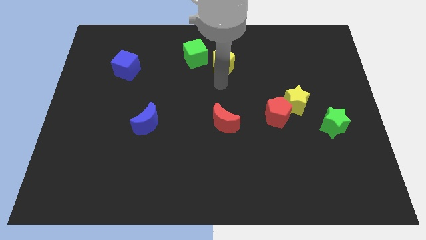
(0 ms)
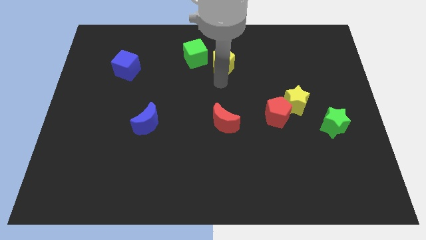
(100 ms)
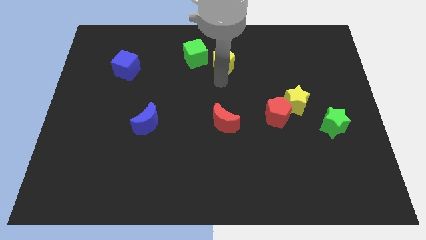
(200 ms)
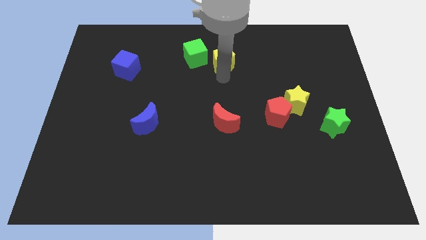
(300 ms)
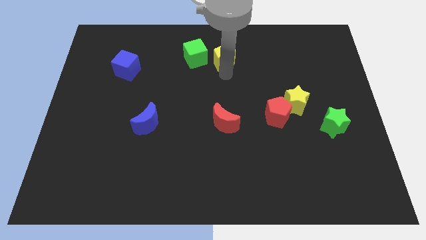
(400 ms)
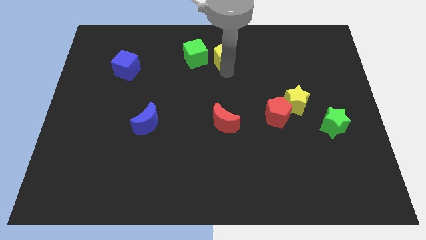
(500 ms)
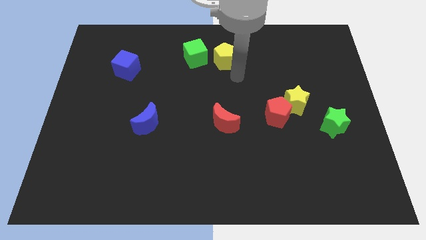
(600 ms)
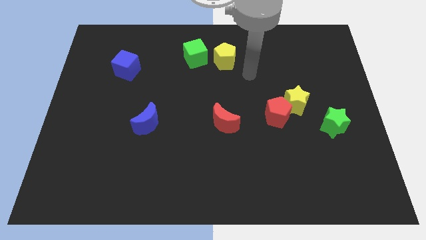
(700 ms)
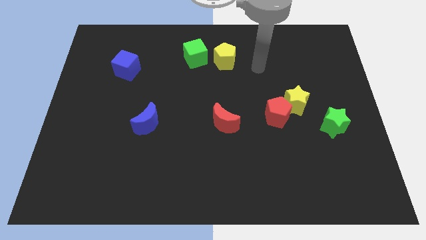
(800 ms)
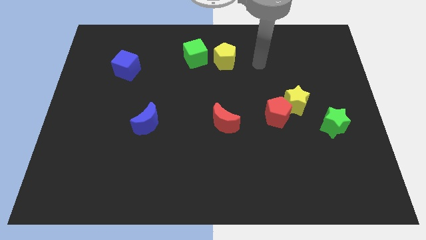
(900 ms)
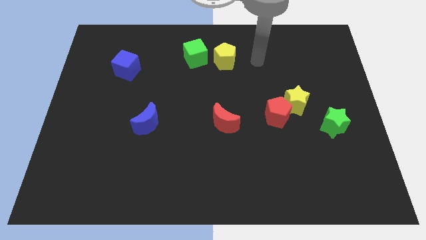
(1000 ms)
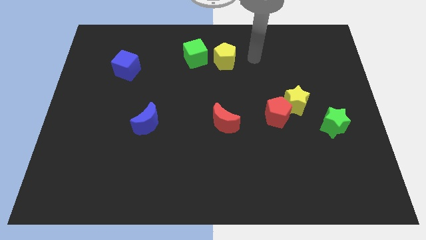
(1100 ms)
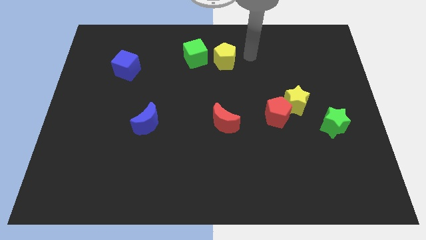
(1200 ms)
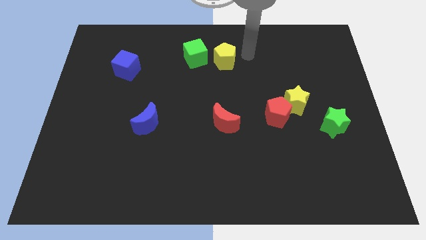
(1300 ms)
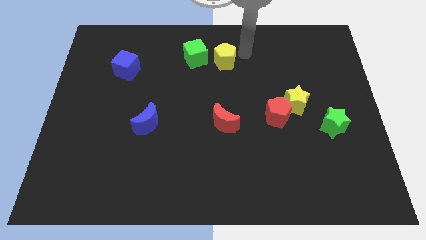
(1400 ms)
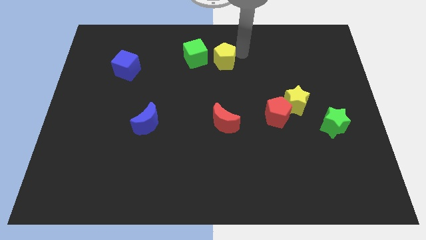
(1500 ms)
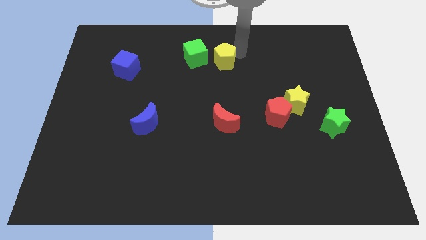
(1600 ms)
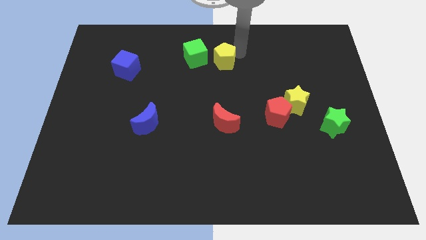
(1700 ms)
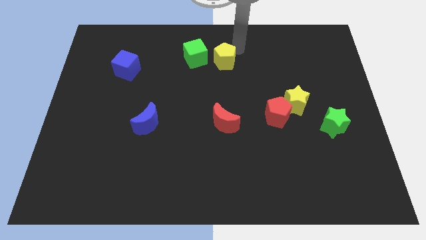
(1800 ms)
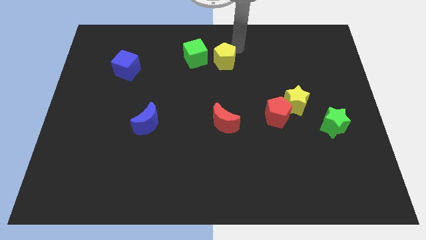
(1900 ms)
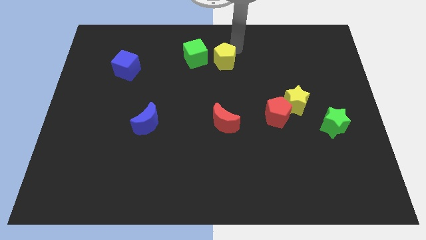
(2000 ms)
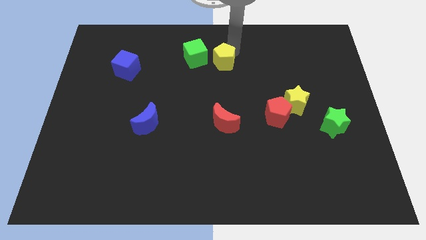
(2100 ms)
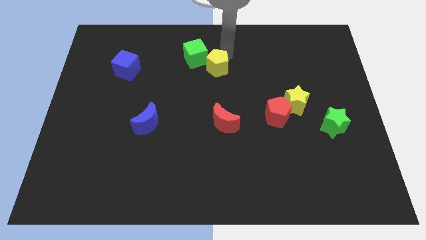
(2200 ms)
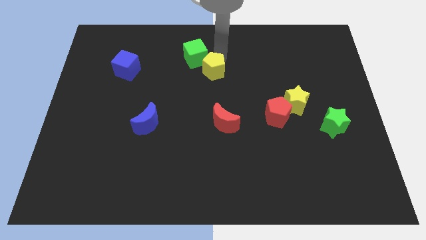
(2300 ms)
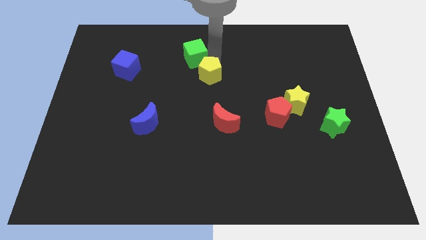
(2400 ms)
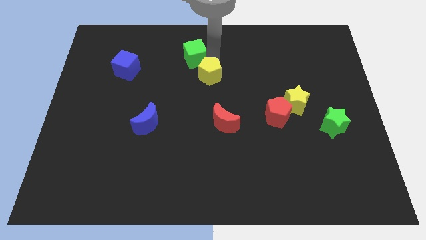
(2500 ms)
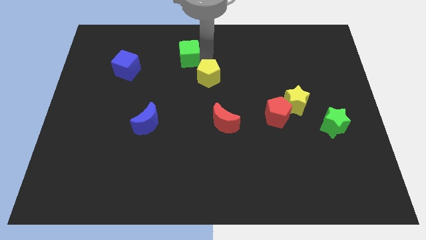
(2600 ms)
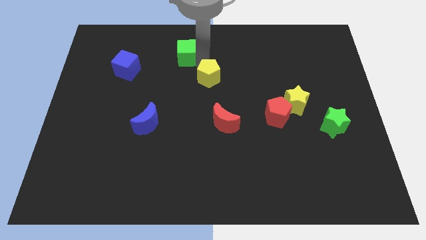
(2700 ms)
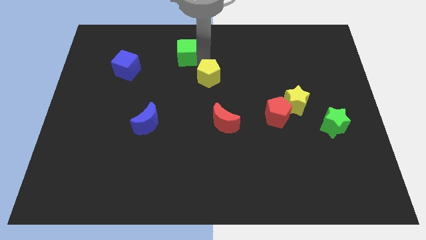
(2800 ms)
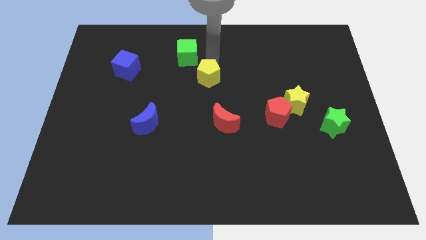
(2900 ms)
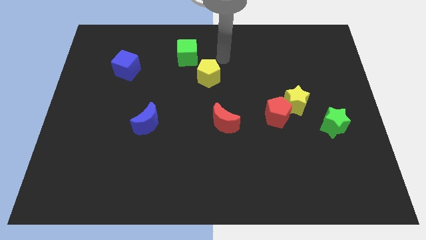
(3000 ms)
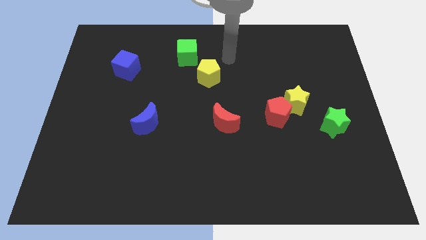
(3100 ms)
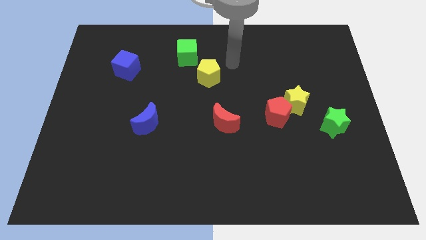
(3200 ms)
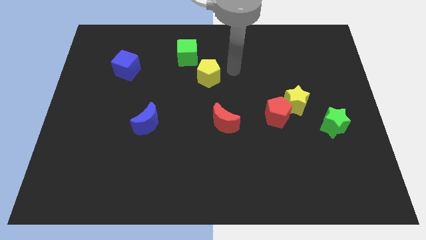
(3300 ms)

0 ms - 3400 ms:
place the yellow pentagon diagonally bottom right to the green cube

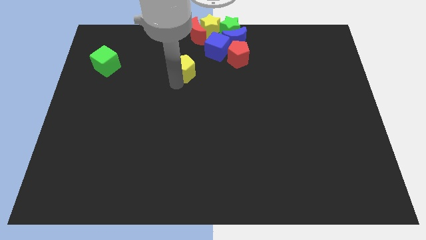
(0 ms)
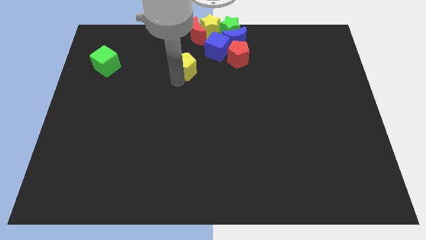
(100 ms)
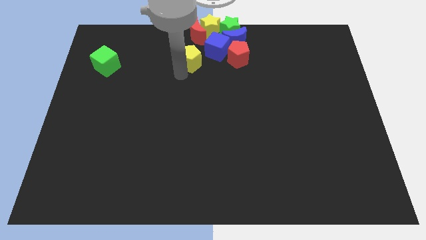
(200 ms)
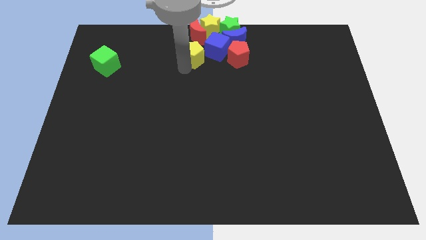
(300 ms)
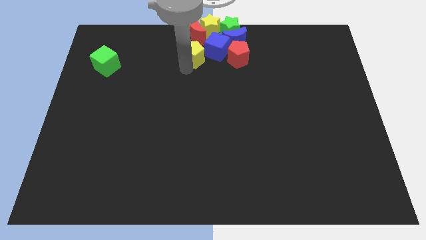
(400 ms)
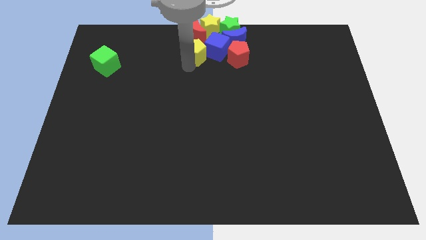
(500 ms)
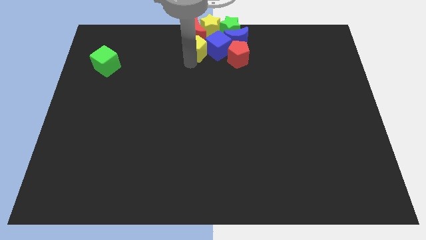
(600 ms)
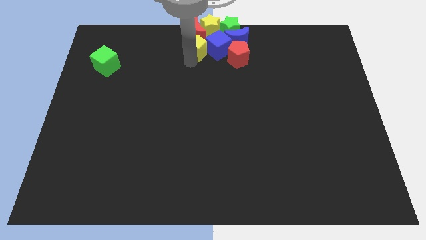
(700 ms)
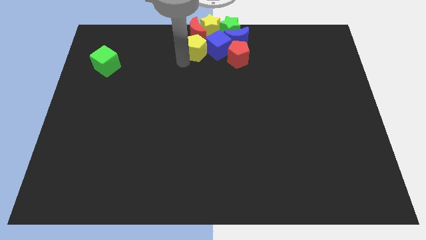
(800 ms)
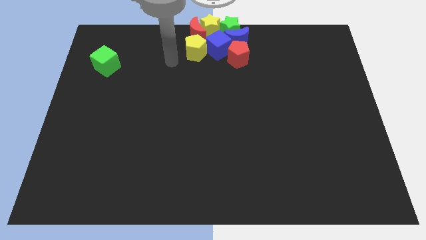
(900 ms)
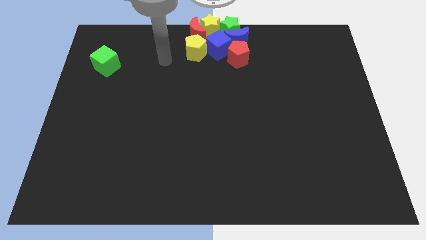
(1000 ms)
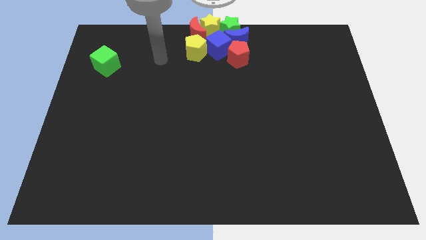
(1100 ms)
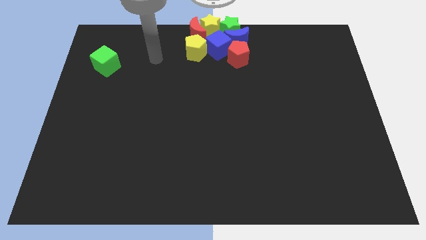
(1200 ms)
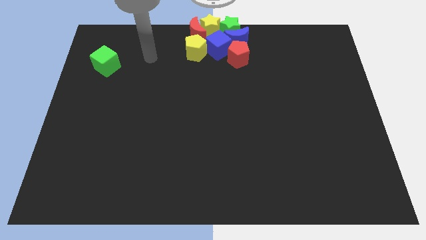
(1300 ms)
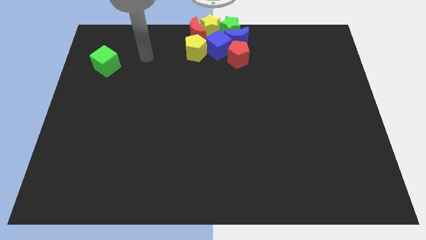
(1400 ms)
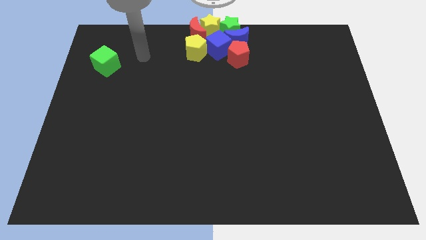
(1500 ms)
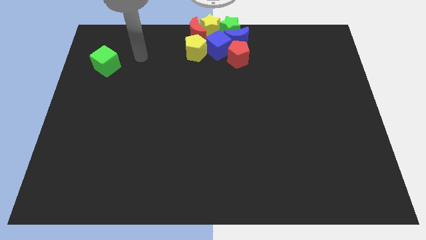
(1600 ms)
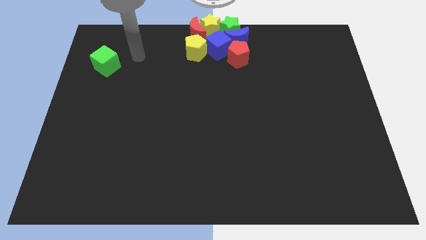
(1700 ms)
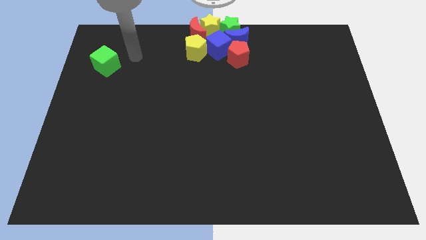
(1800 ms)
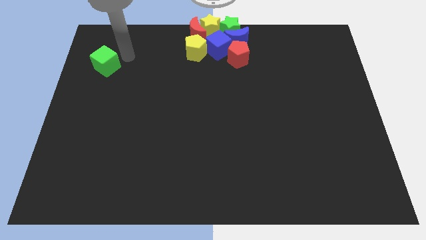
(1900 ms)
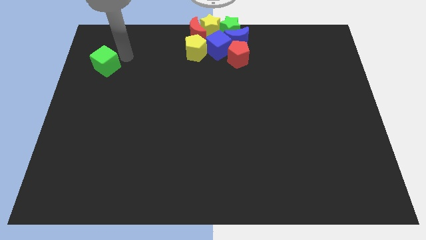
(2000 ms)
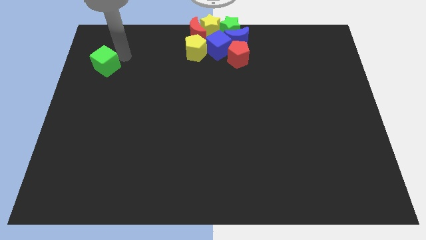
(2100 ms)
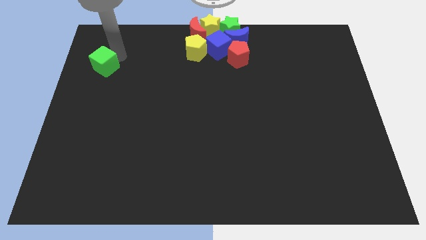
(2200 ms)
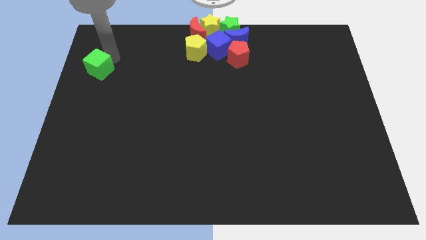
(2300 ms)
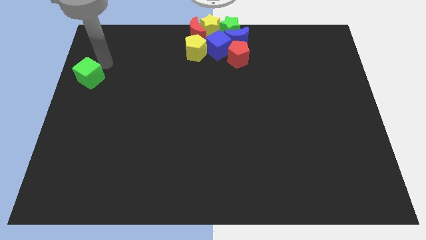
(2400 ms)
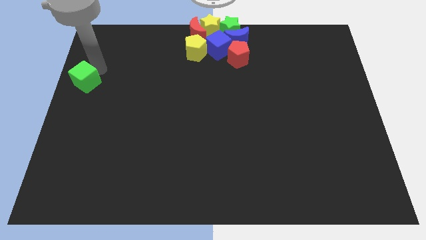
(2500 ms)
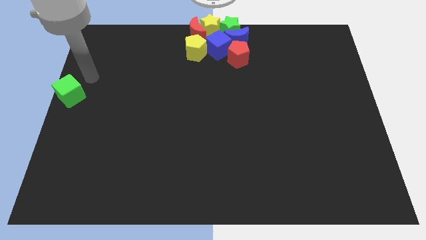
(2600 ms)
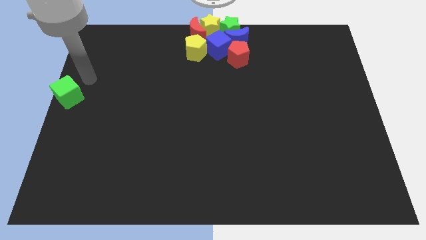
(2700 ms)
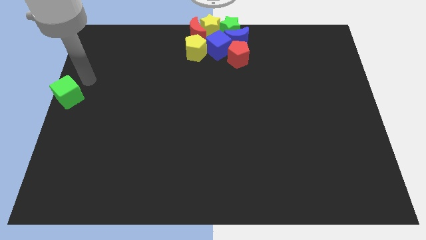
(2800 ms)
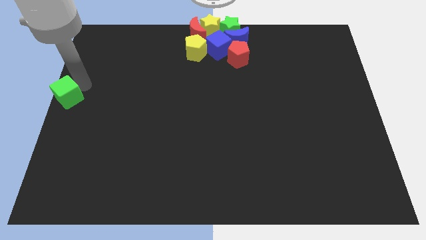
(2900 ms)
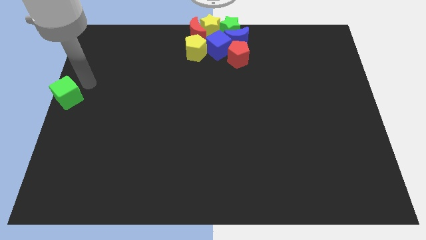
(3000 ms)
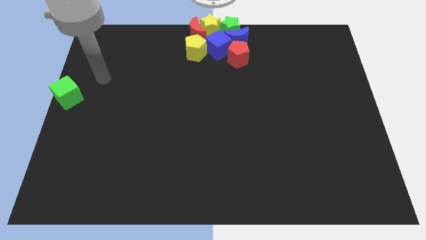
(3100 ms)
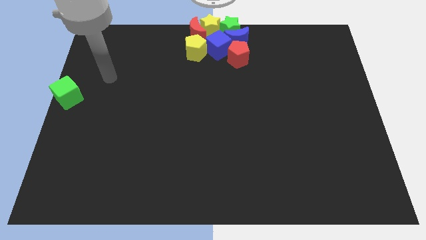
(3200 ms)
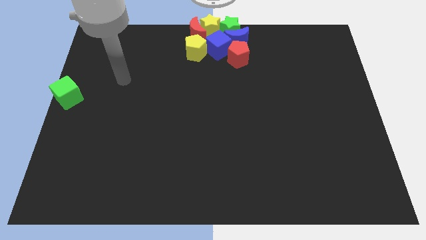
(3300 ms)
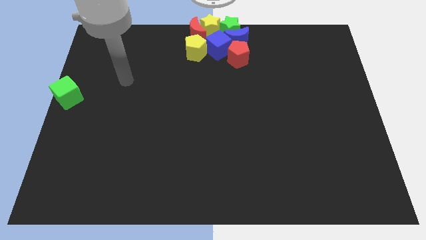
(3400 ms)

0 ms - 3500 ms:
push the yellow pentagon and green cube diagonal to each other

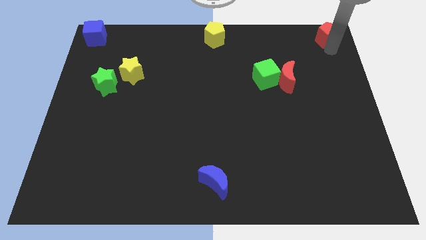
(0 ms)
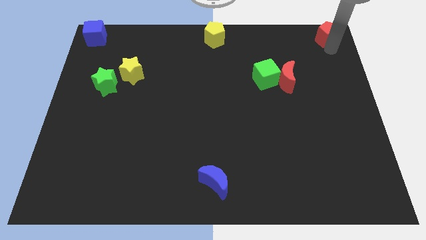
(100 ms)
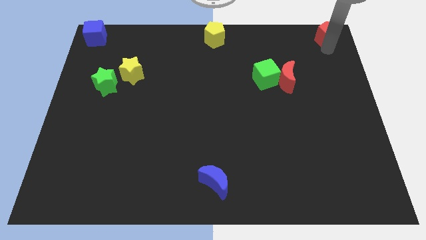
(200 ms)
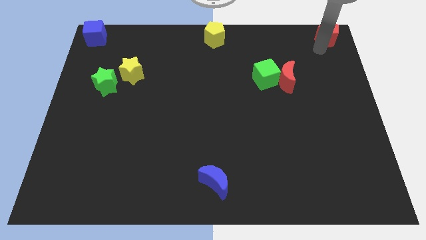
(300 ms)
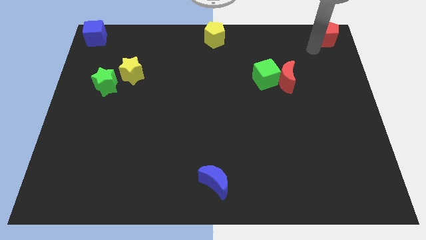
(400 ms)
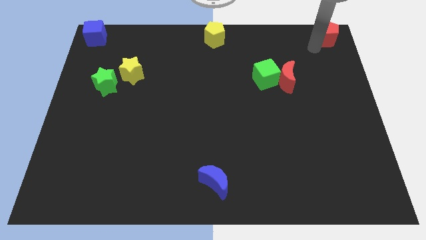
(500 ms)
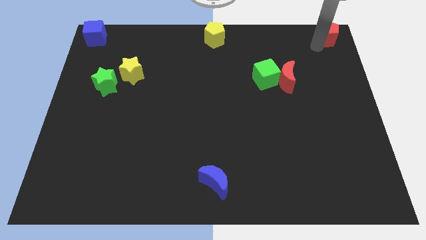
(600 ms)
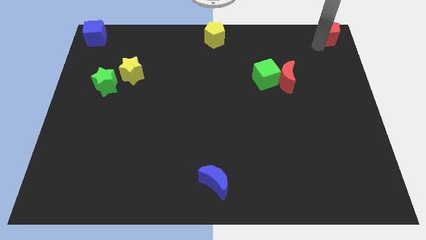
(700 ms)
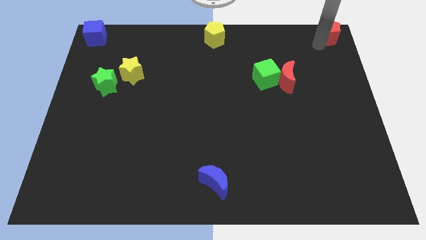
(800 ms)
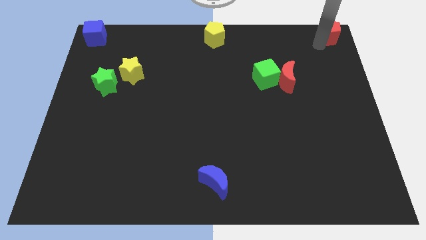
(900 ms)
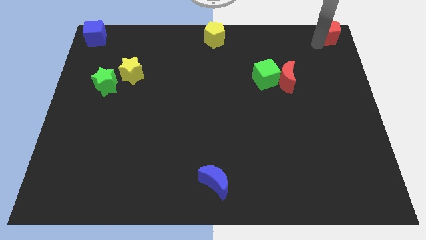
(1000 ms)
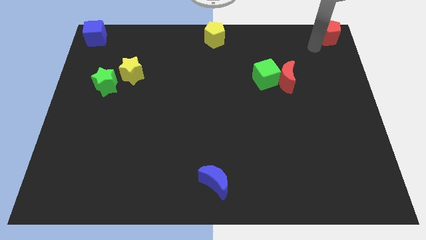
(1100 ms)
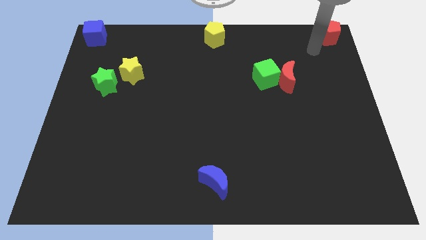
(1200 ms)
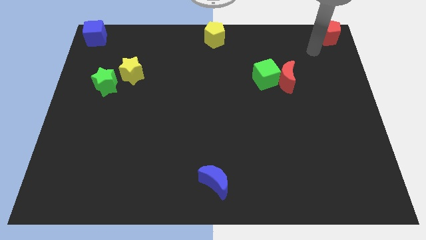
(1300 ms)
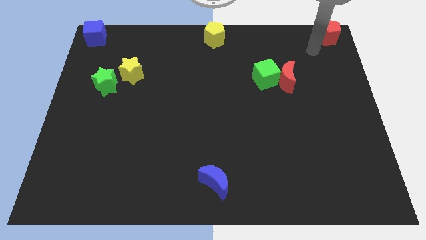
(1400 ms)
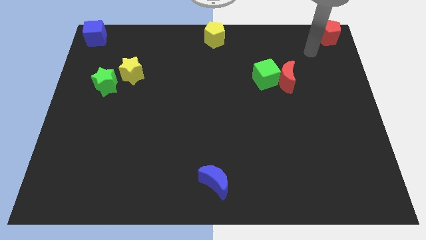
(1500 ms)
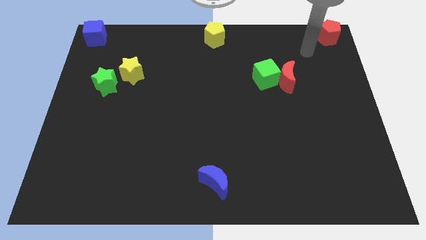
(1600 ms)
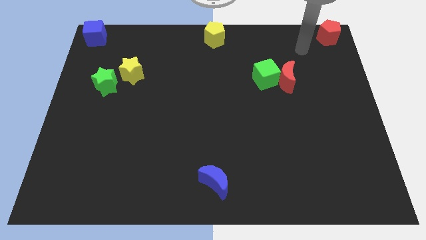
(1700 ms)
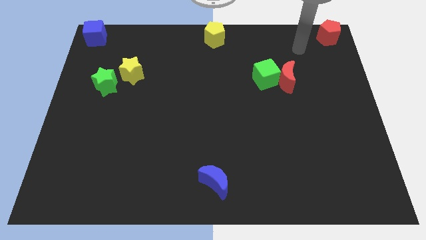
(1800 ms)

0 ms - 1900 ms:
move the red pentagon to the top right corner of the board
